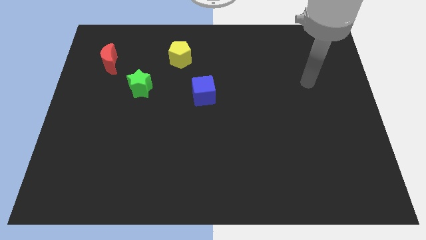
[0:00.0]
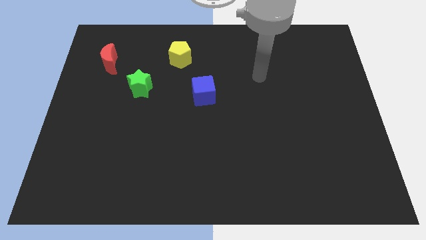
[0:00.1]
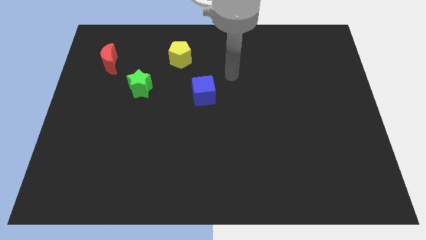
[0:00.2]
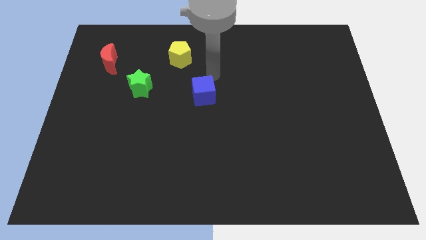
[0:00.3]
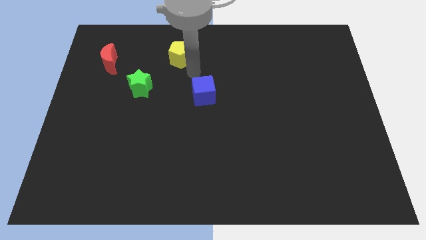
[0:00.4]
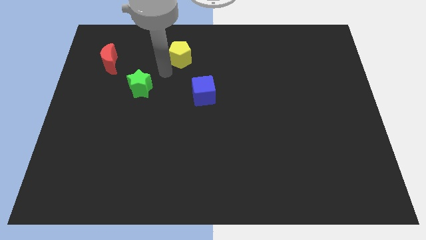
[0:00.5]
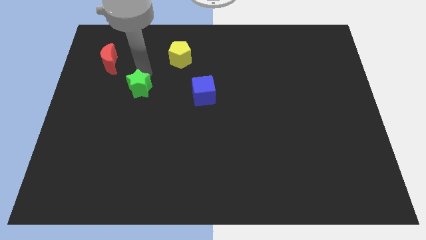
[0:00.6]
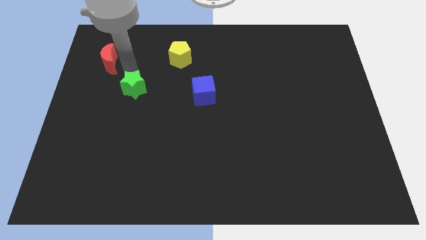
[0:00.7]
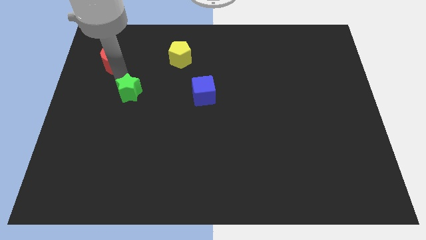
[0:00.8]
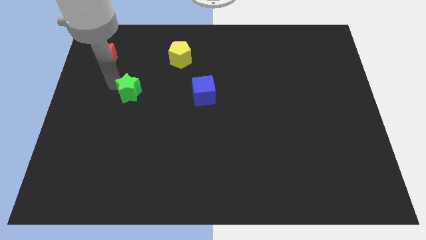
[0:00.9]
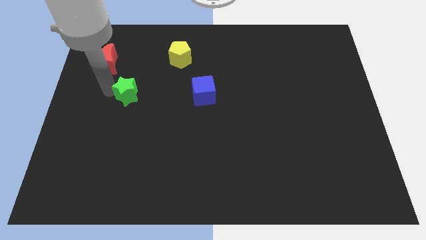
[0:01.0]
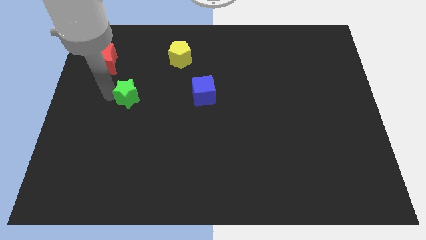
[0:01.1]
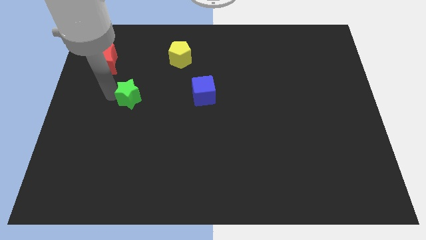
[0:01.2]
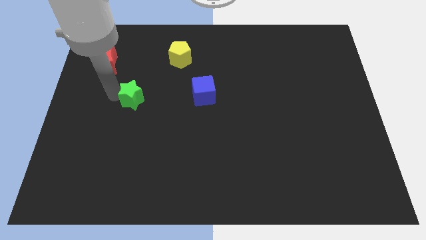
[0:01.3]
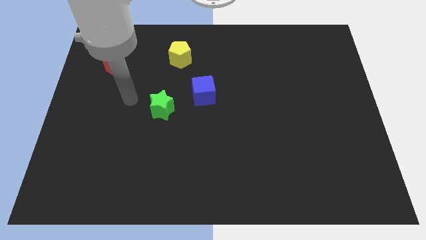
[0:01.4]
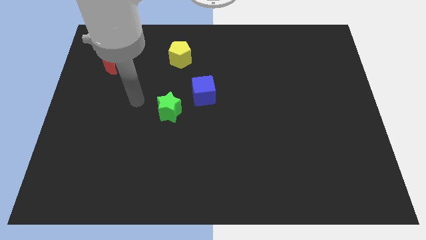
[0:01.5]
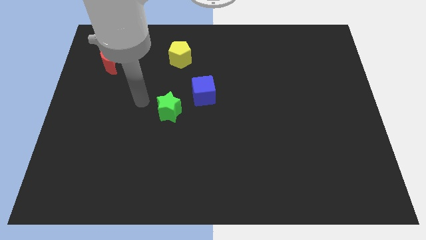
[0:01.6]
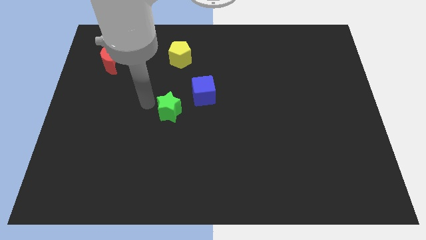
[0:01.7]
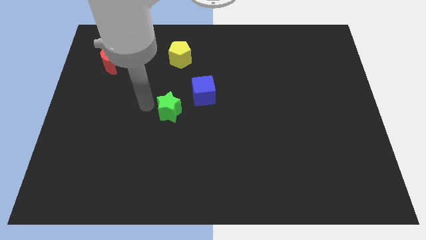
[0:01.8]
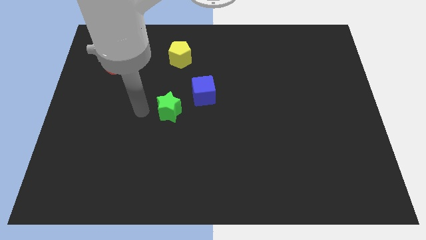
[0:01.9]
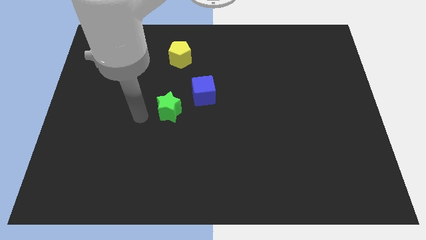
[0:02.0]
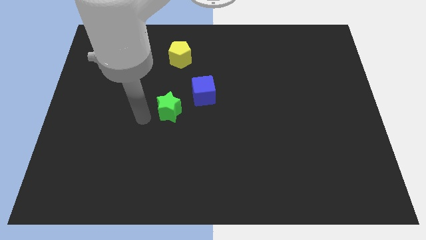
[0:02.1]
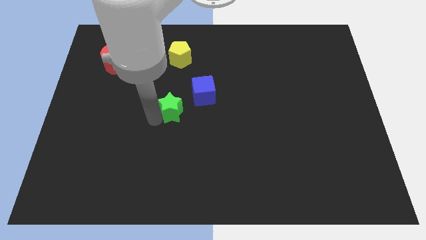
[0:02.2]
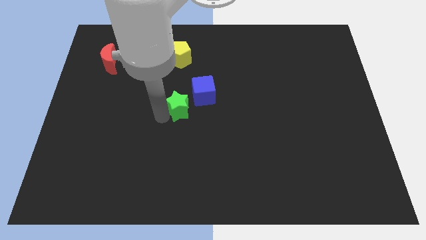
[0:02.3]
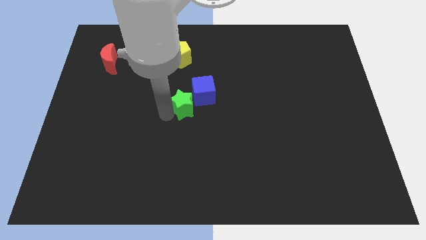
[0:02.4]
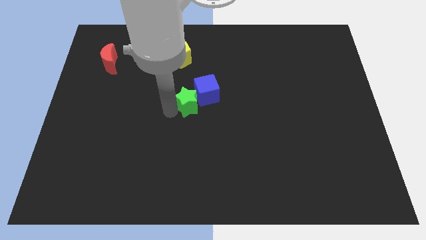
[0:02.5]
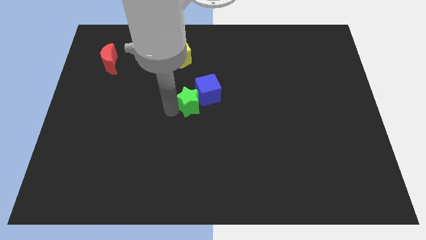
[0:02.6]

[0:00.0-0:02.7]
slide the green star to the cube

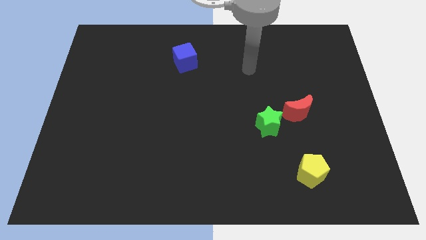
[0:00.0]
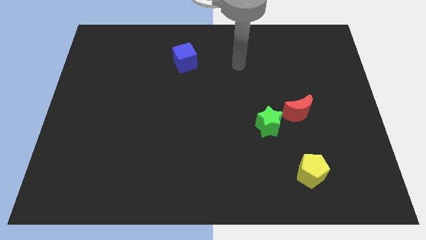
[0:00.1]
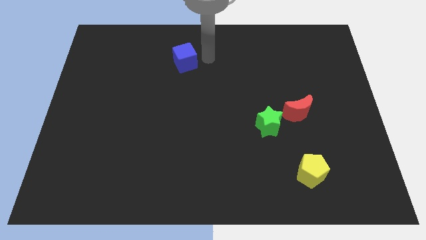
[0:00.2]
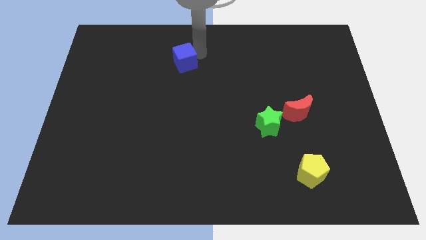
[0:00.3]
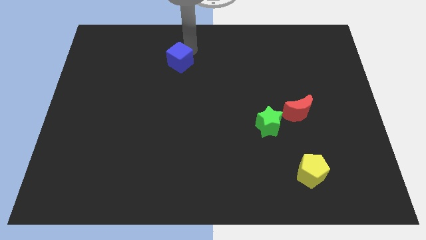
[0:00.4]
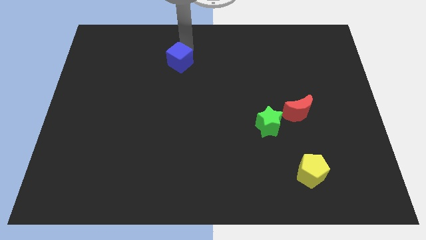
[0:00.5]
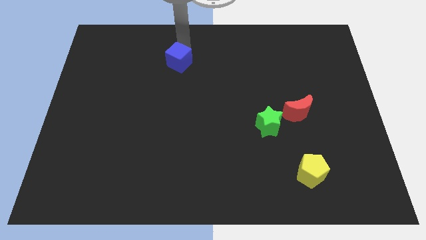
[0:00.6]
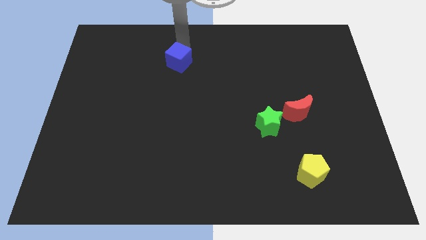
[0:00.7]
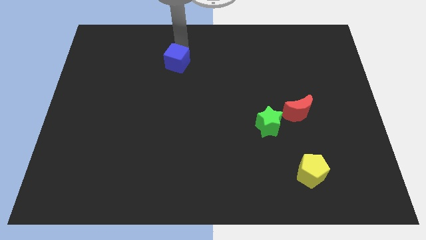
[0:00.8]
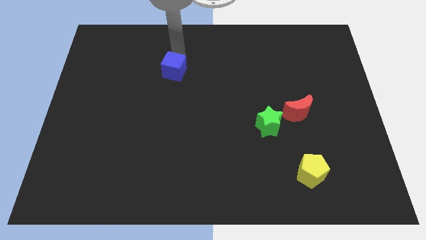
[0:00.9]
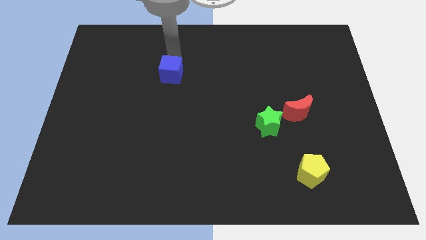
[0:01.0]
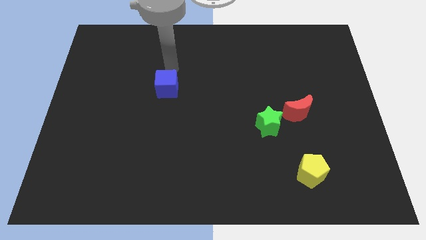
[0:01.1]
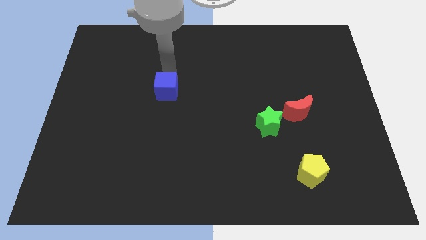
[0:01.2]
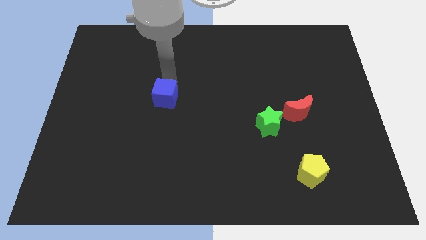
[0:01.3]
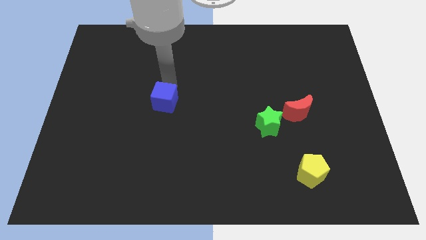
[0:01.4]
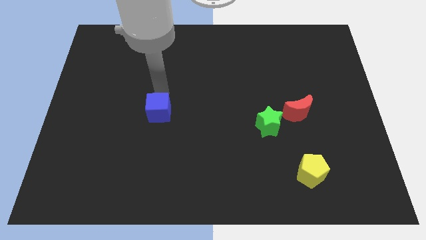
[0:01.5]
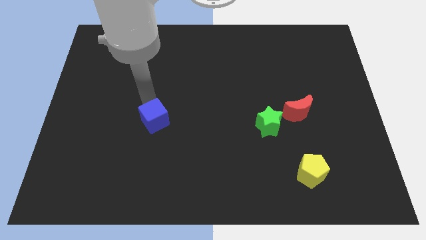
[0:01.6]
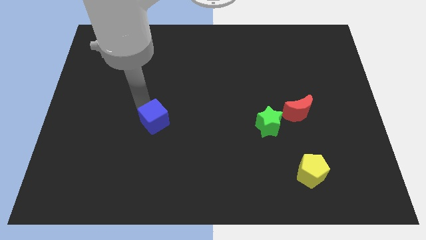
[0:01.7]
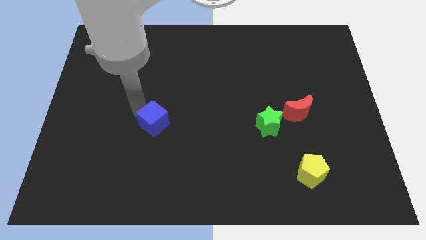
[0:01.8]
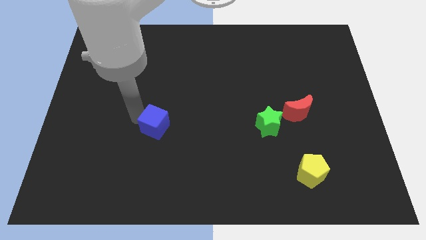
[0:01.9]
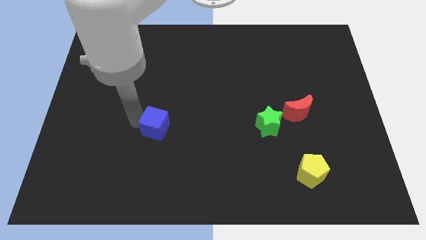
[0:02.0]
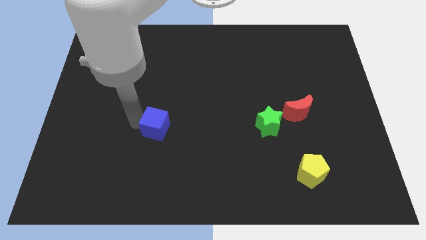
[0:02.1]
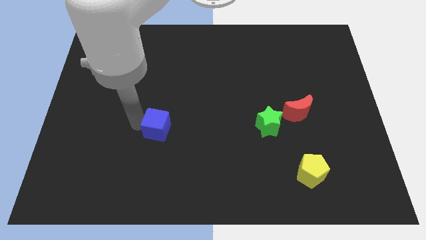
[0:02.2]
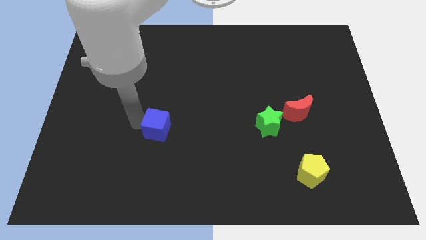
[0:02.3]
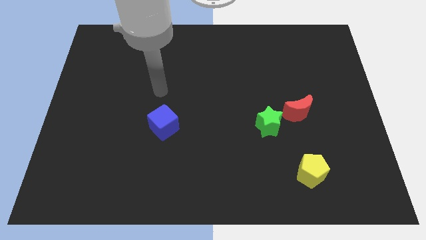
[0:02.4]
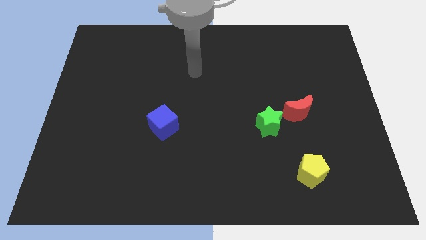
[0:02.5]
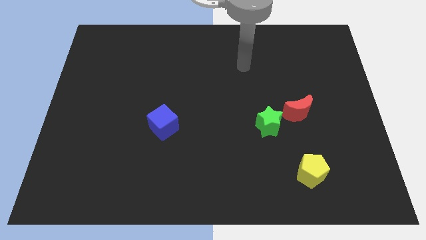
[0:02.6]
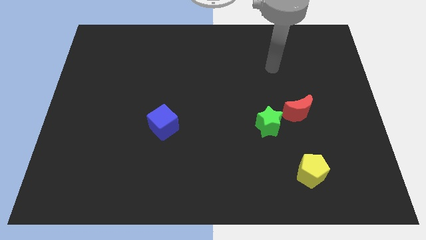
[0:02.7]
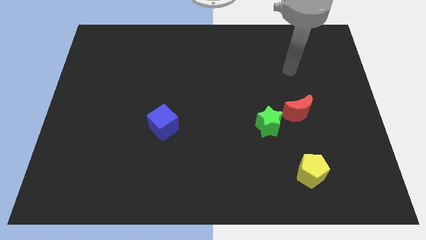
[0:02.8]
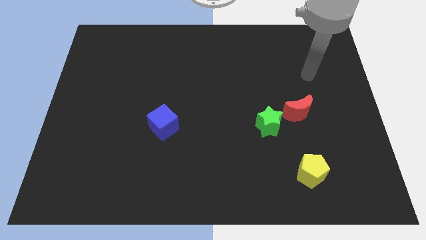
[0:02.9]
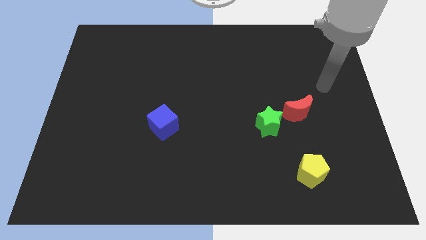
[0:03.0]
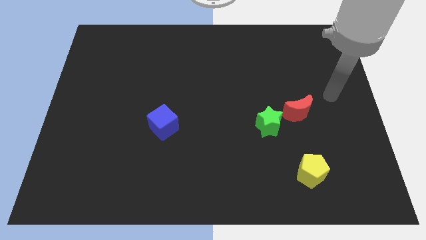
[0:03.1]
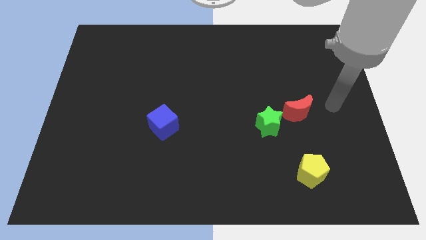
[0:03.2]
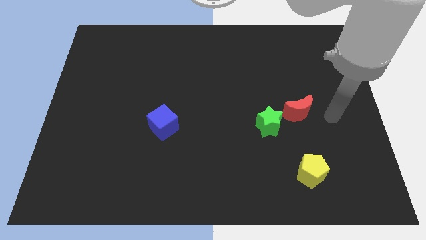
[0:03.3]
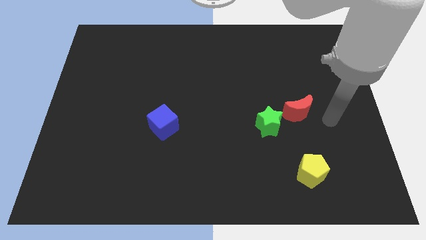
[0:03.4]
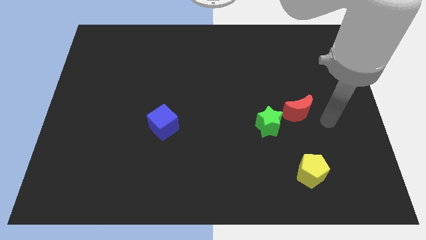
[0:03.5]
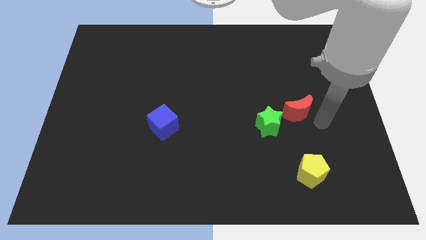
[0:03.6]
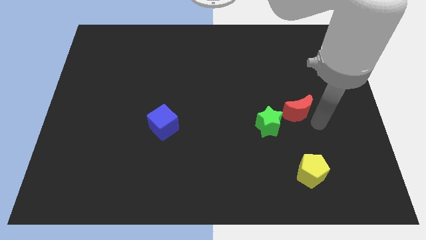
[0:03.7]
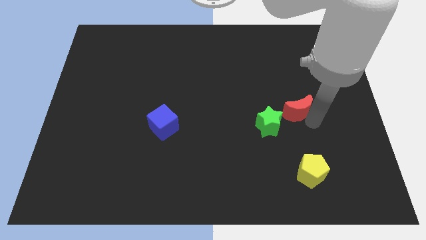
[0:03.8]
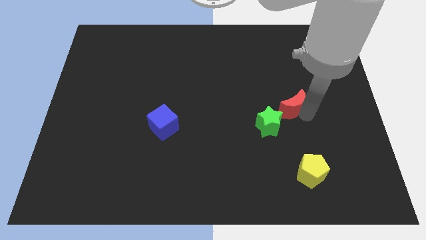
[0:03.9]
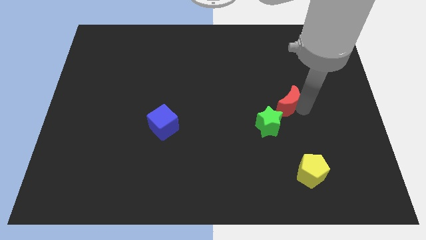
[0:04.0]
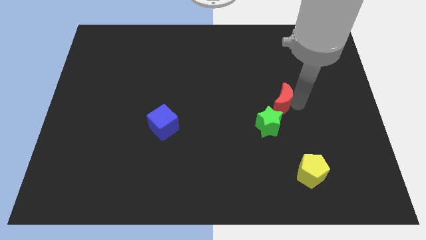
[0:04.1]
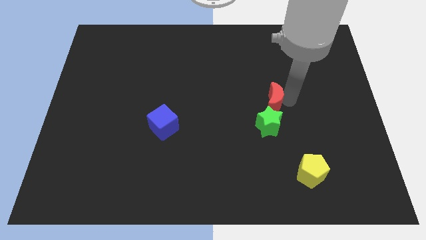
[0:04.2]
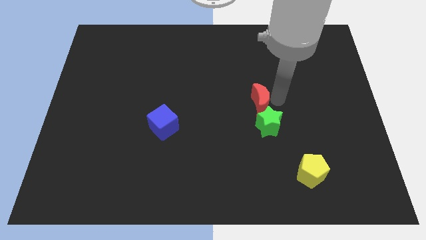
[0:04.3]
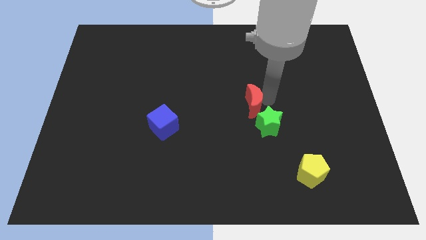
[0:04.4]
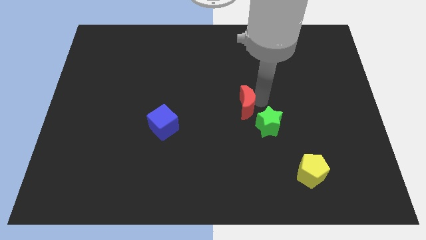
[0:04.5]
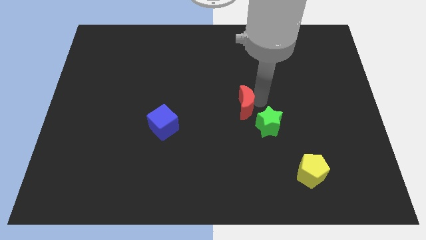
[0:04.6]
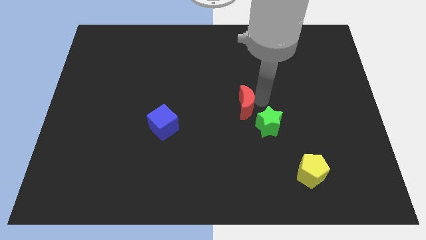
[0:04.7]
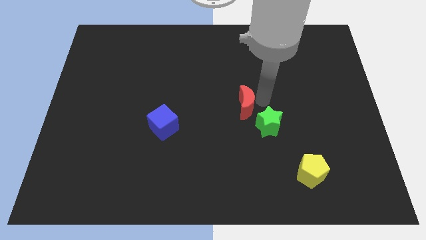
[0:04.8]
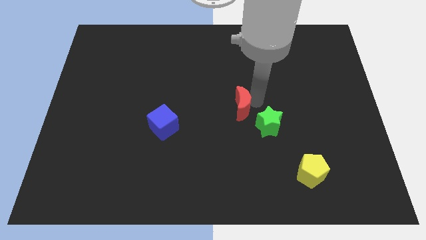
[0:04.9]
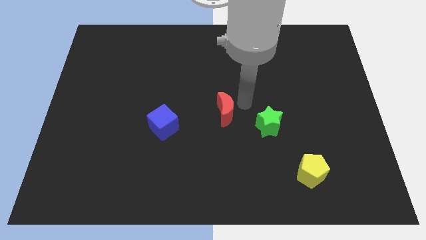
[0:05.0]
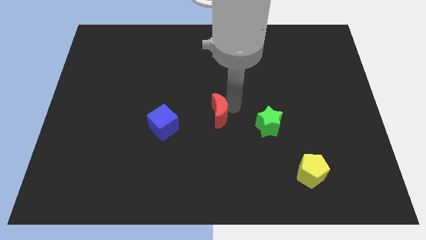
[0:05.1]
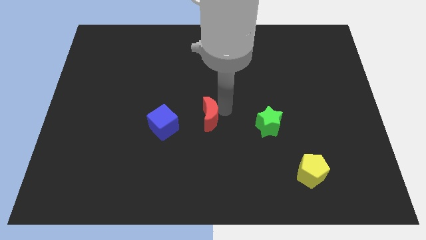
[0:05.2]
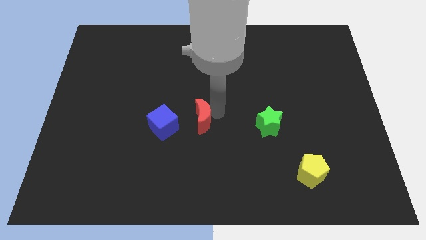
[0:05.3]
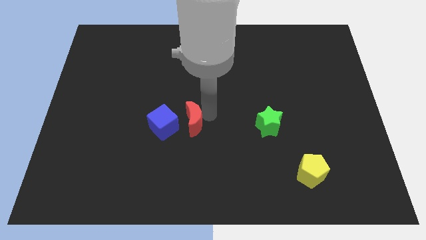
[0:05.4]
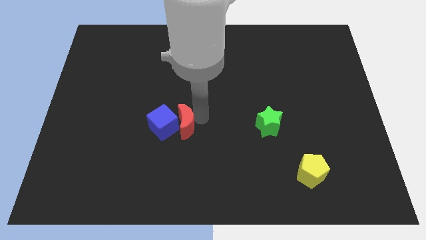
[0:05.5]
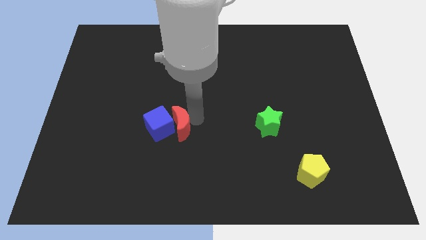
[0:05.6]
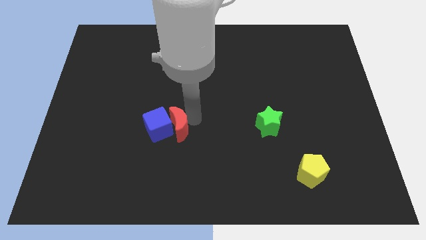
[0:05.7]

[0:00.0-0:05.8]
put the moon to the cube

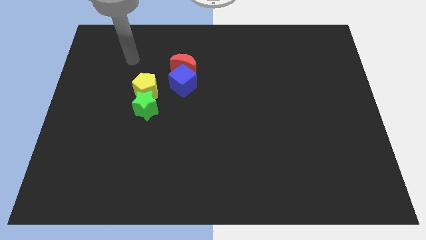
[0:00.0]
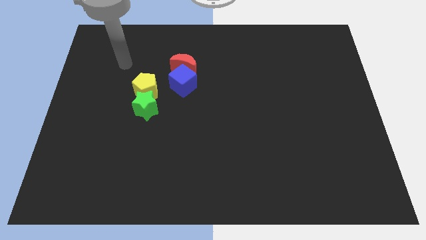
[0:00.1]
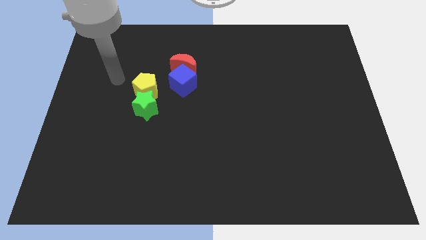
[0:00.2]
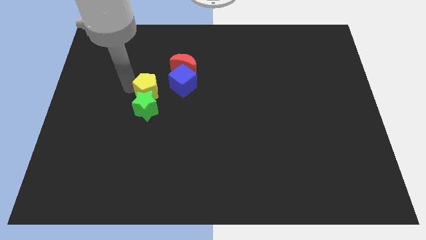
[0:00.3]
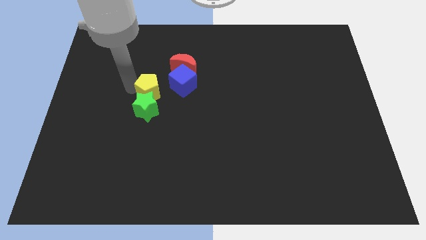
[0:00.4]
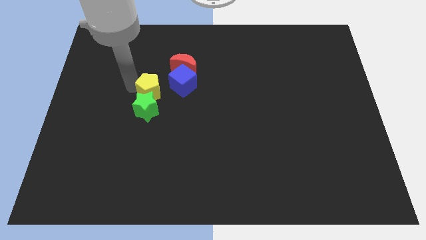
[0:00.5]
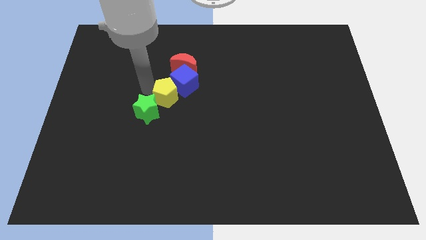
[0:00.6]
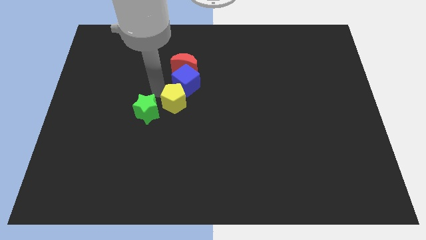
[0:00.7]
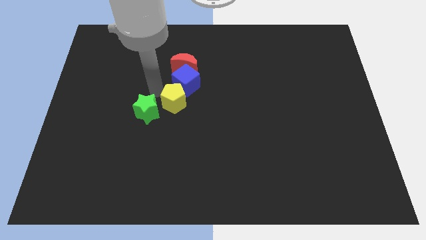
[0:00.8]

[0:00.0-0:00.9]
push the pentagon to the blue block
